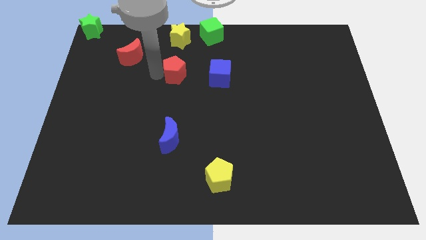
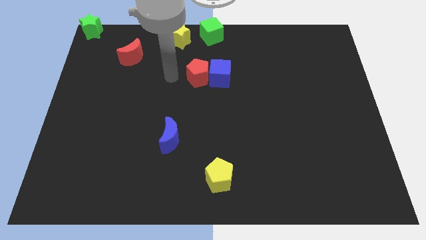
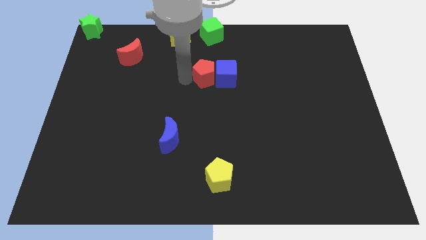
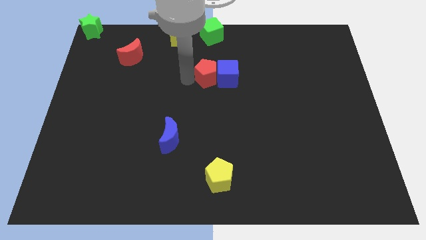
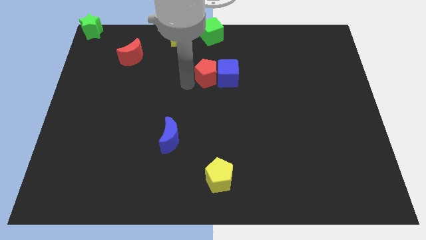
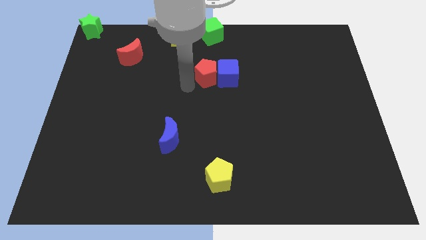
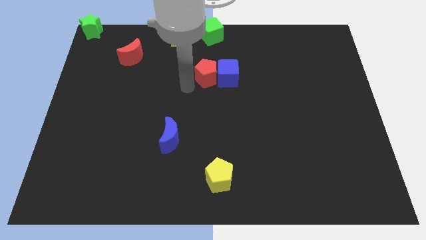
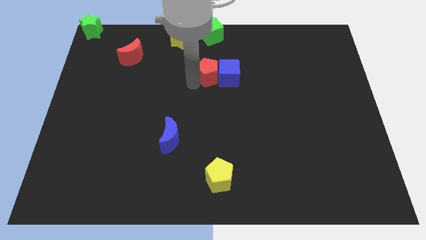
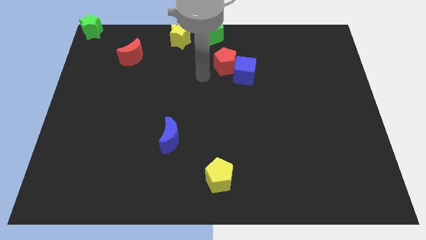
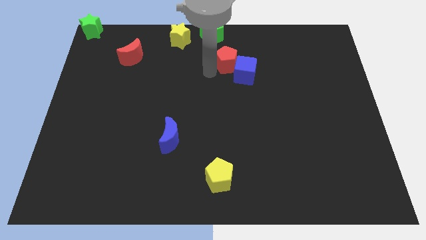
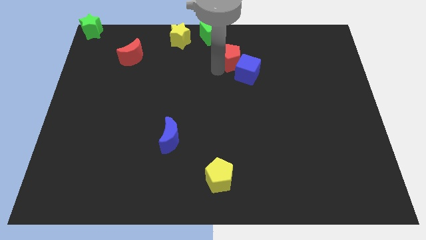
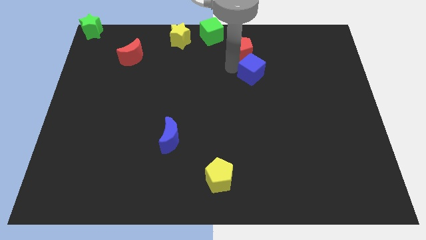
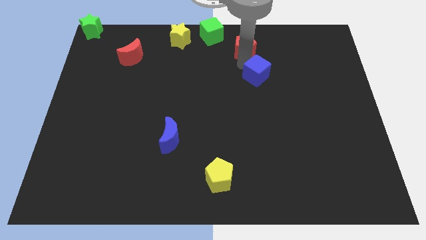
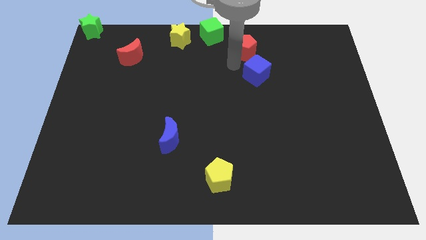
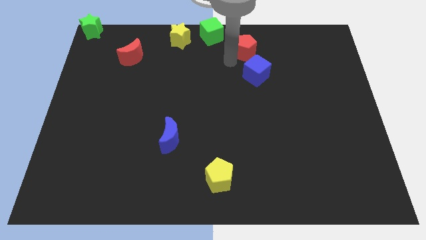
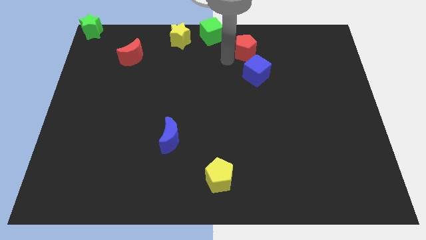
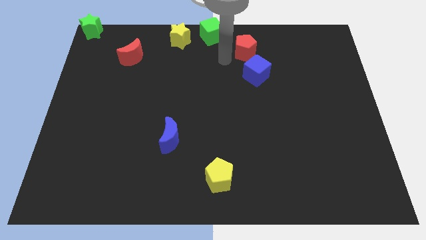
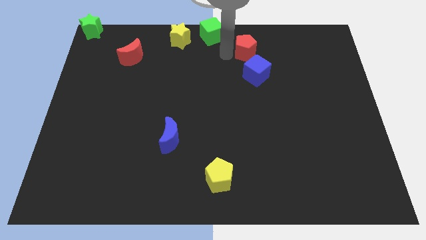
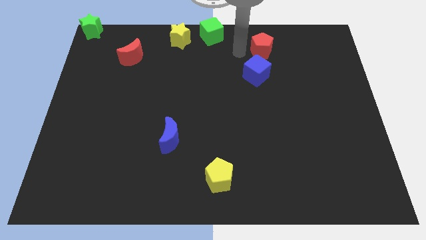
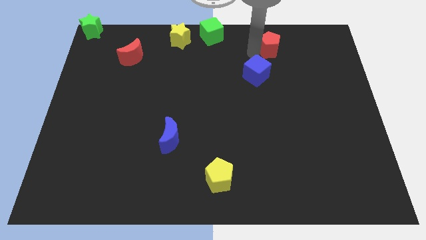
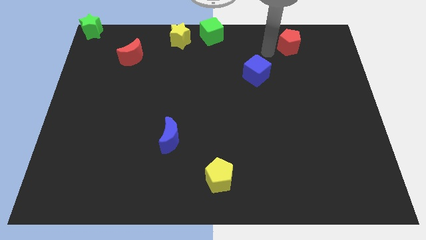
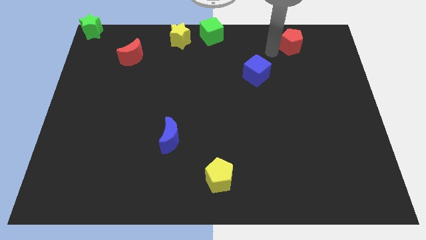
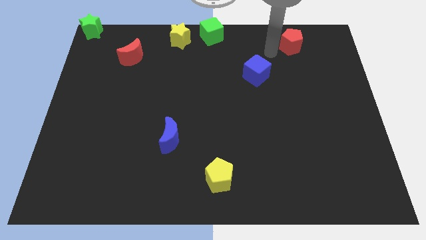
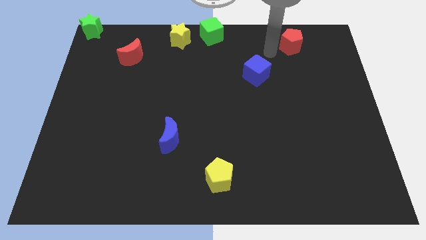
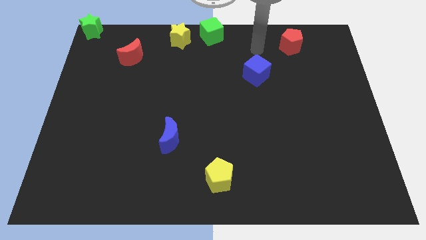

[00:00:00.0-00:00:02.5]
move the red pentagon towards the top right of the board

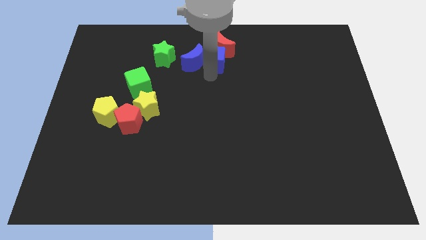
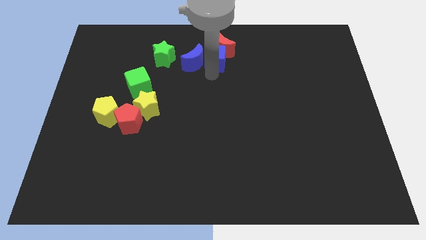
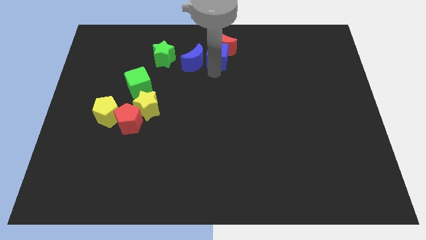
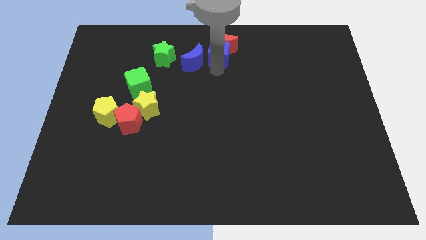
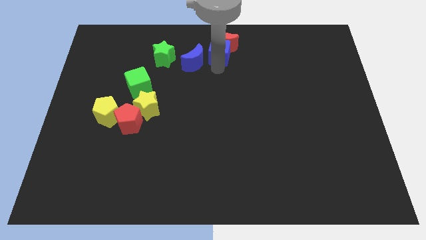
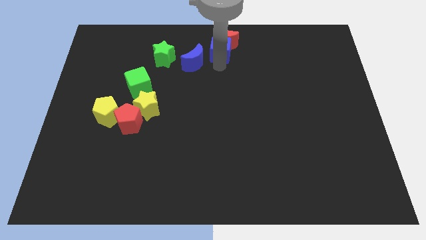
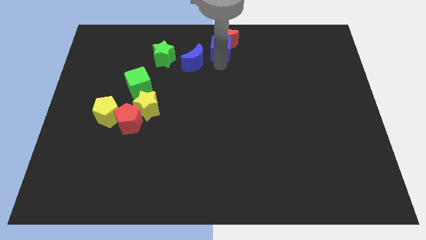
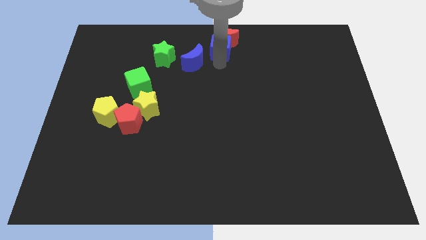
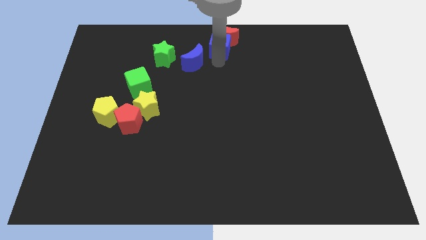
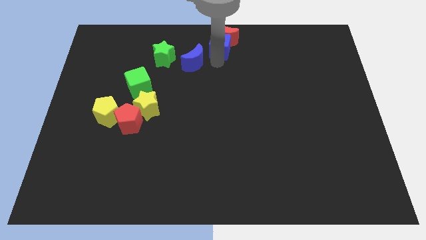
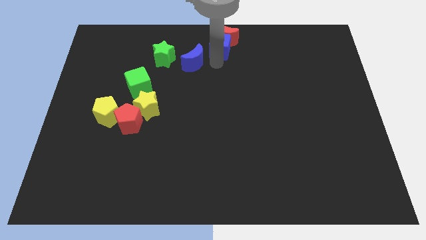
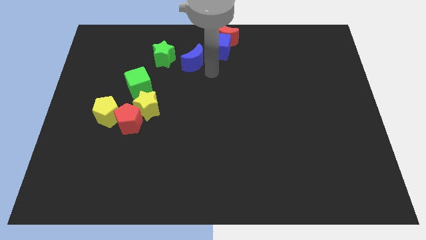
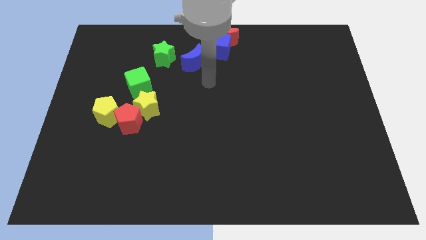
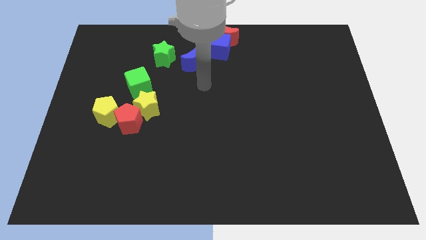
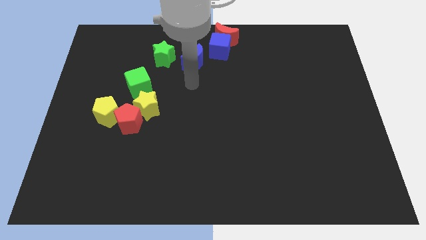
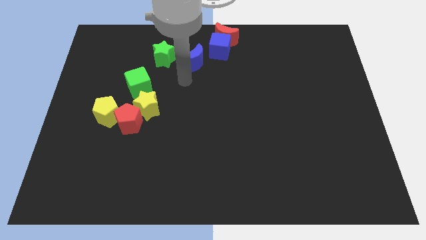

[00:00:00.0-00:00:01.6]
move the blue cube and red moon to the top centre of the board

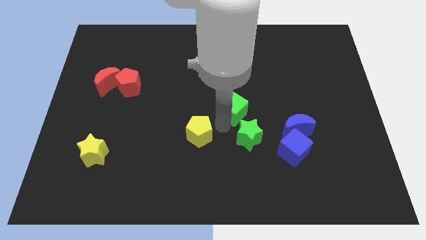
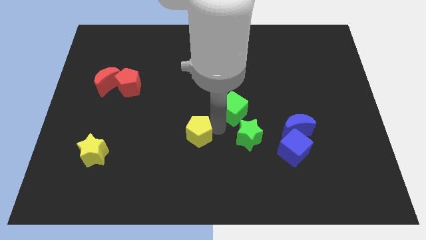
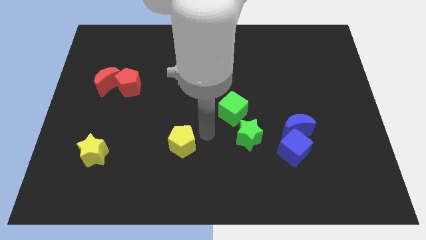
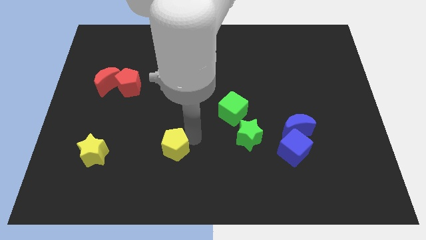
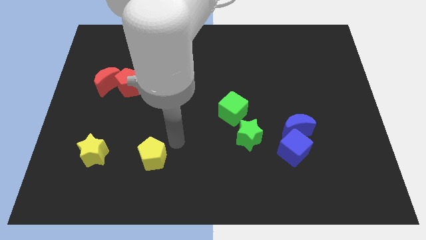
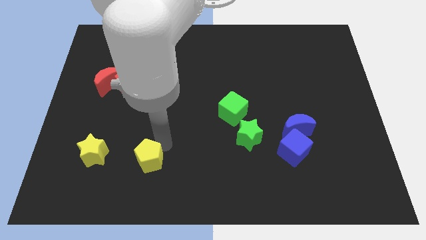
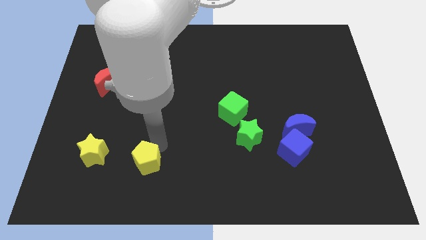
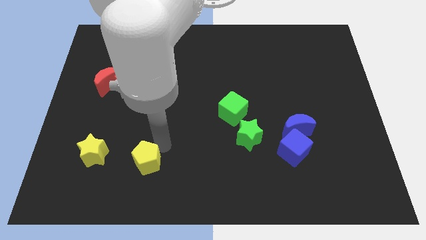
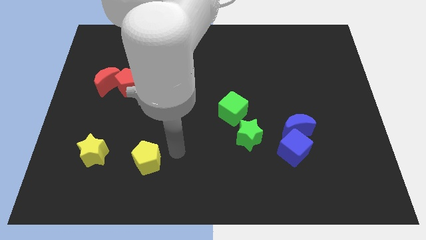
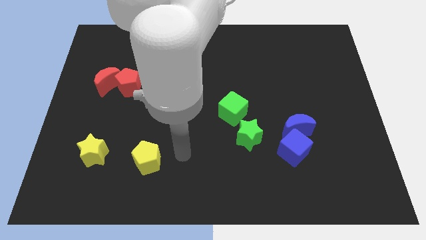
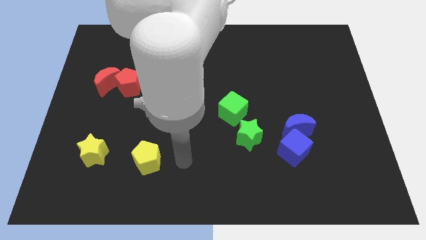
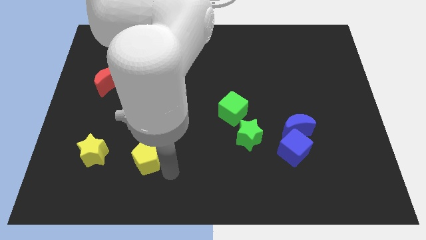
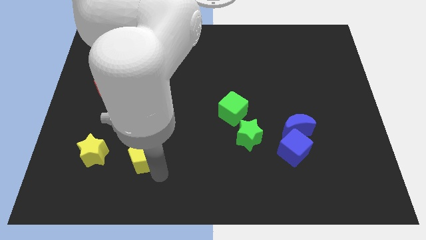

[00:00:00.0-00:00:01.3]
push the yellow pentagon to the right of the yellow star

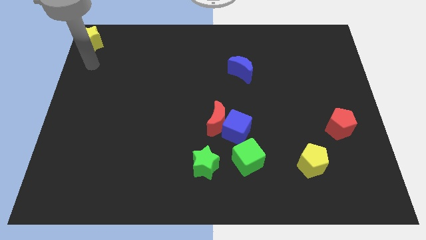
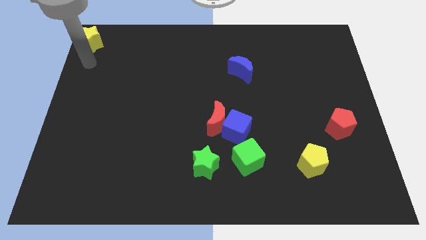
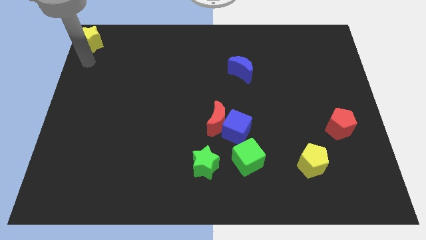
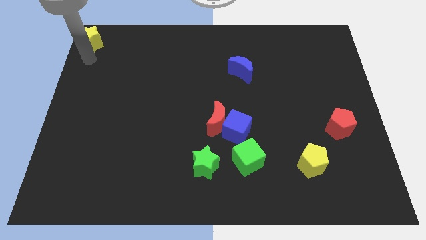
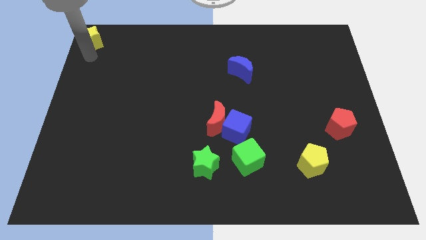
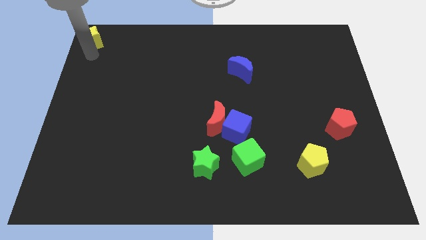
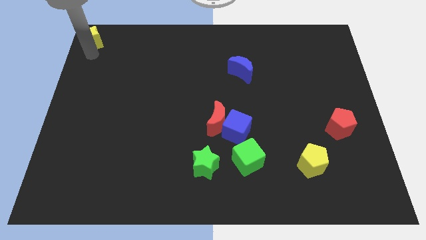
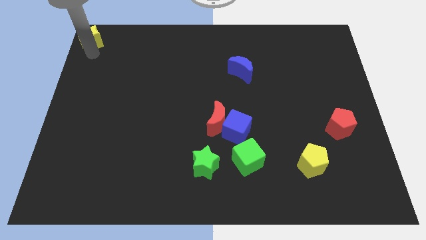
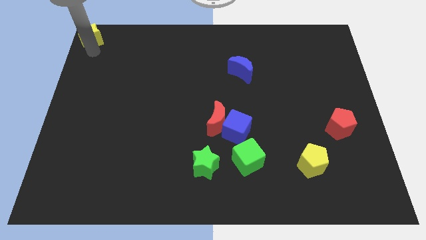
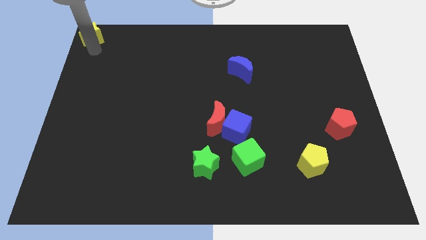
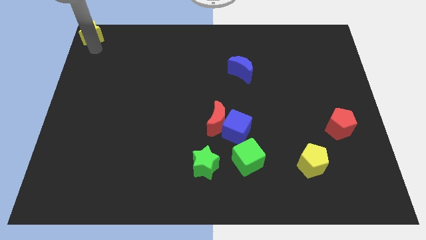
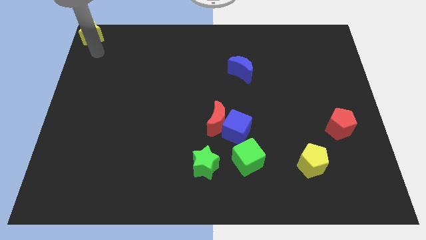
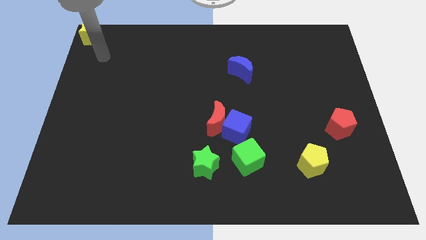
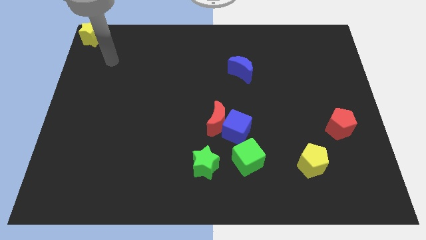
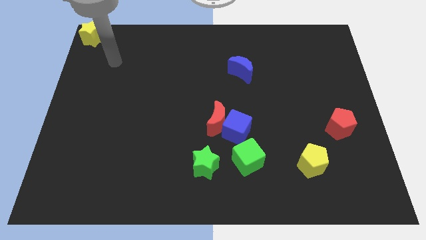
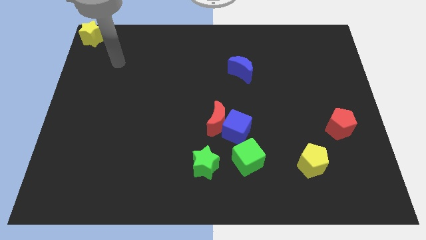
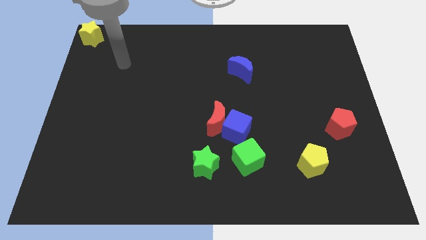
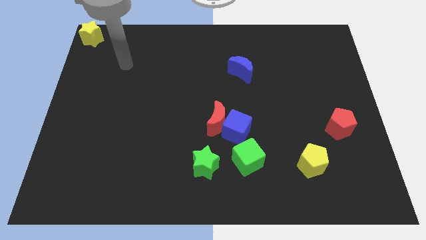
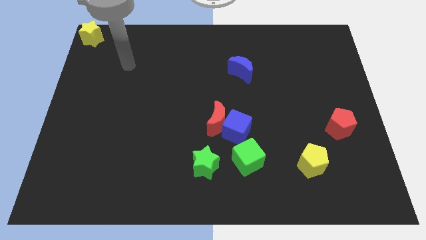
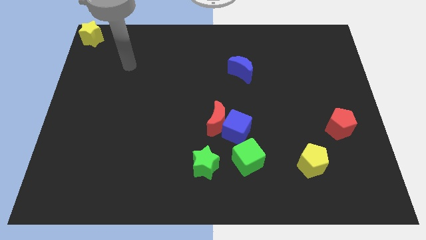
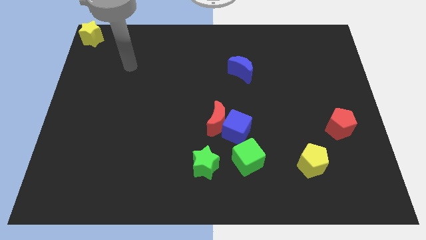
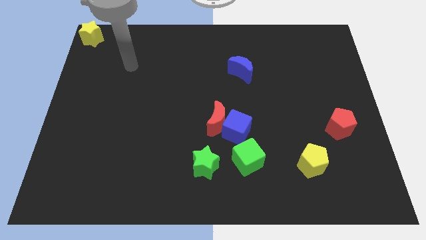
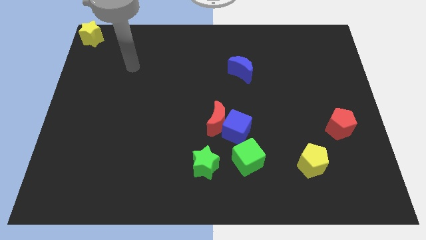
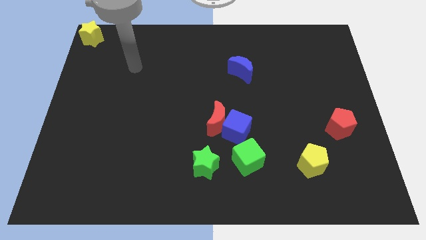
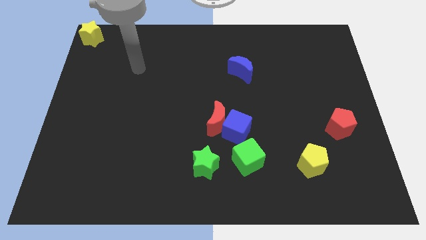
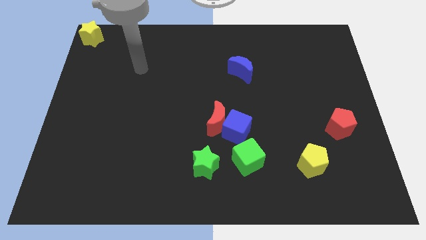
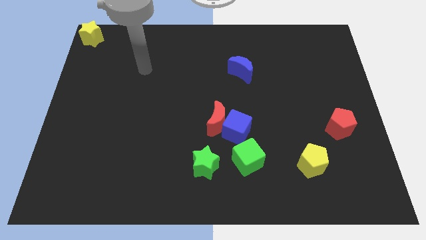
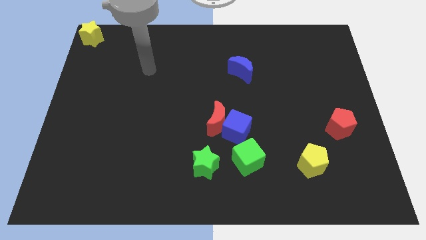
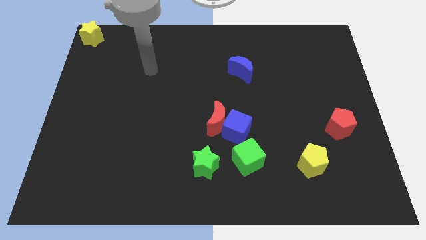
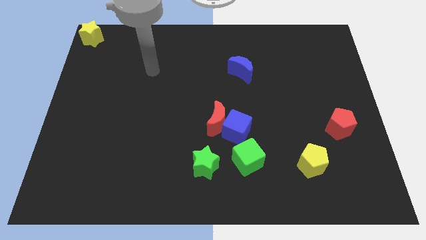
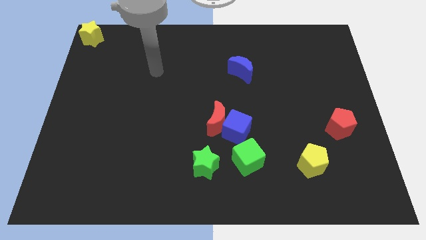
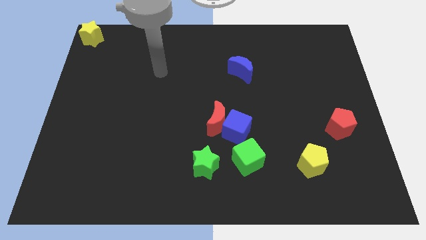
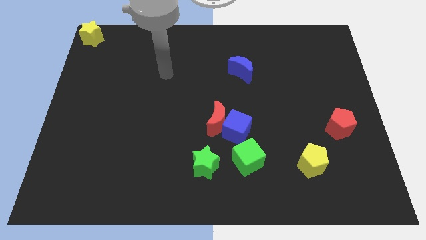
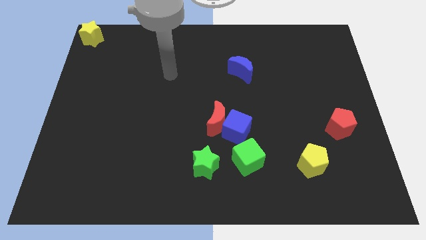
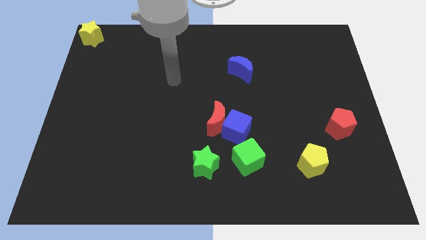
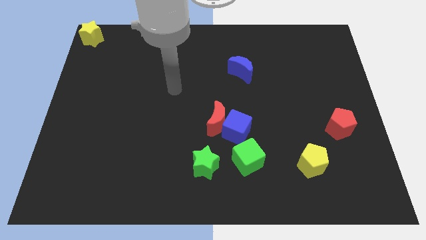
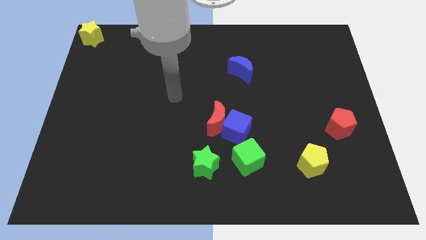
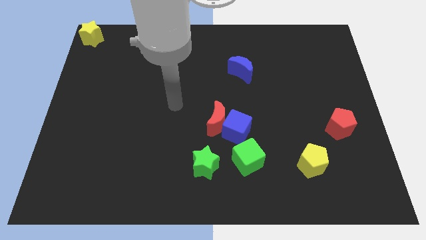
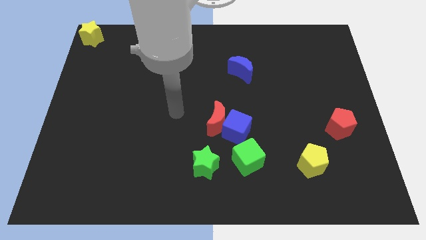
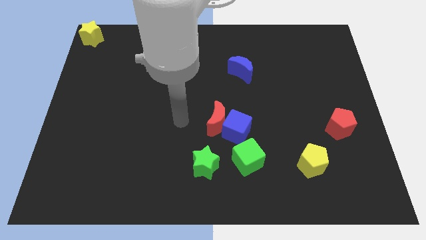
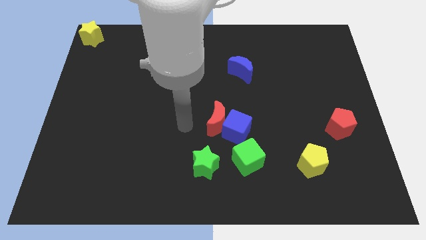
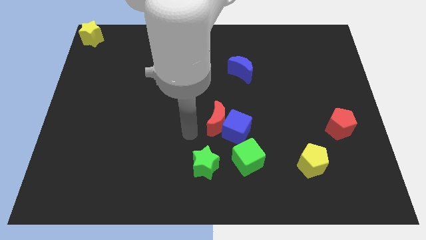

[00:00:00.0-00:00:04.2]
move your arm away from the yellow star
